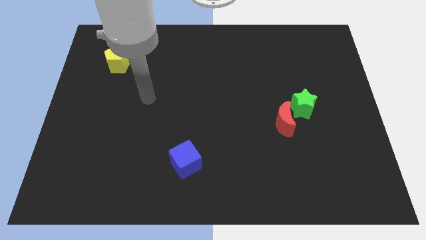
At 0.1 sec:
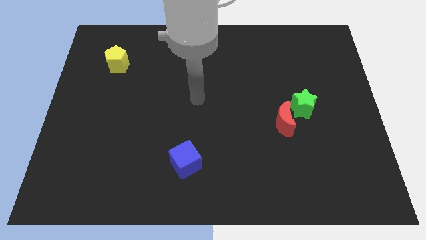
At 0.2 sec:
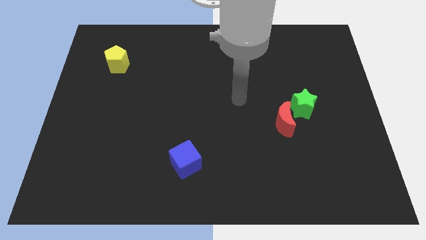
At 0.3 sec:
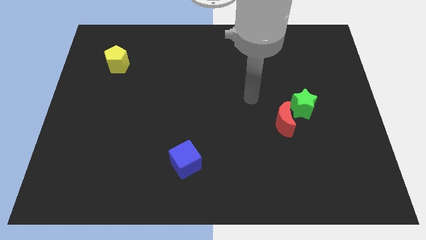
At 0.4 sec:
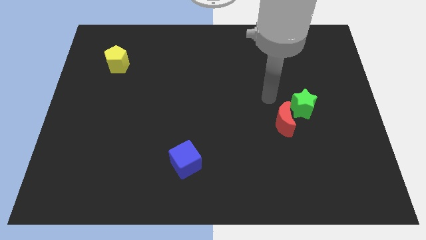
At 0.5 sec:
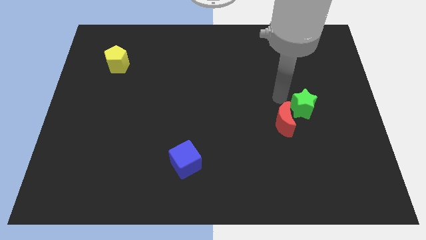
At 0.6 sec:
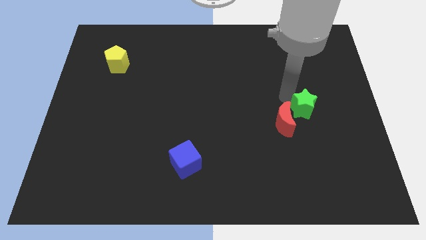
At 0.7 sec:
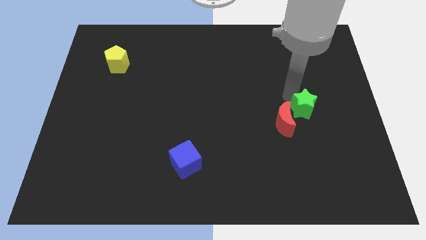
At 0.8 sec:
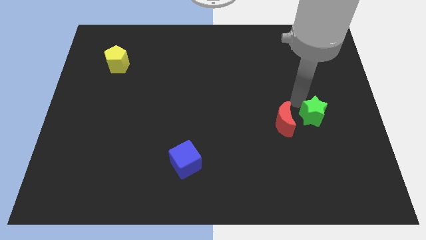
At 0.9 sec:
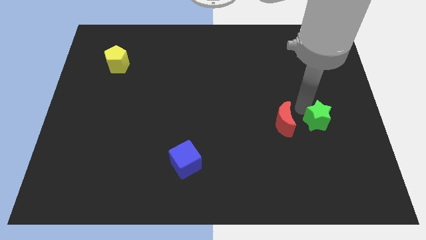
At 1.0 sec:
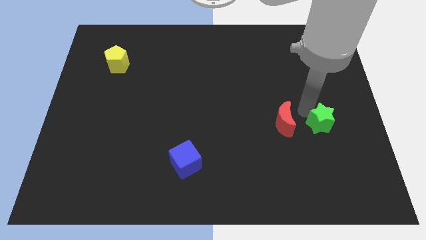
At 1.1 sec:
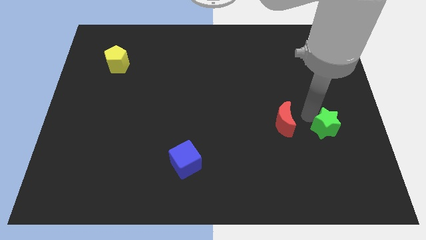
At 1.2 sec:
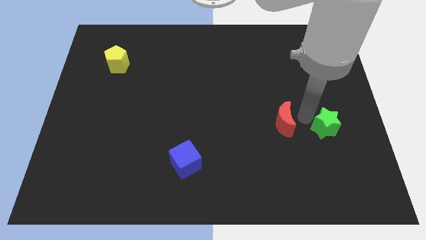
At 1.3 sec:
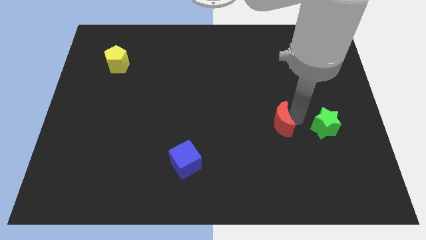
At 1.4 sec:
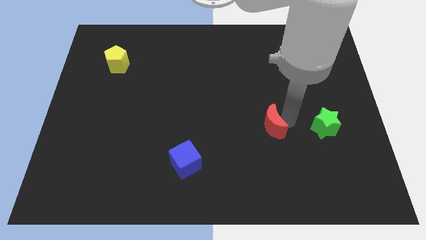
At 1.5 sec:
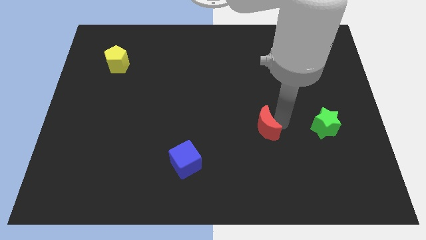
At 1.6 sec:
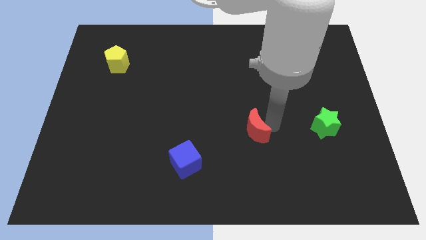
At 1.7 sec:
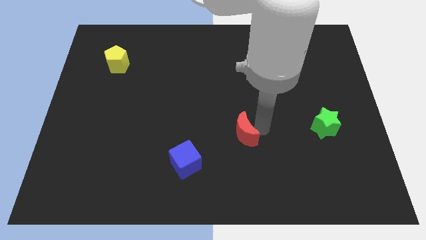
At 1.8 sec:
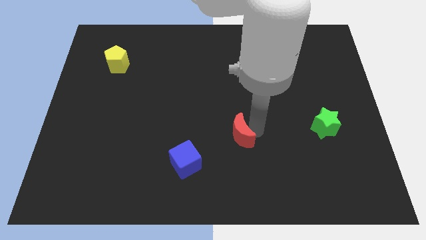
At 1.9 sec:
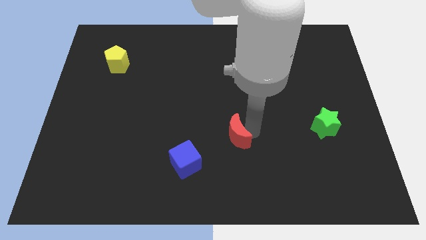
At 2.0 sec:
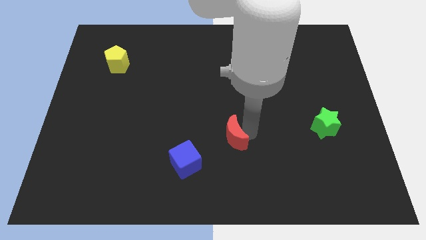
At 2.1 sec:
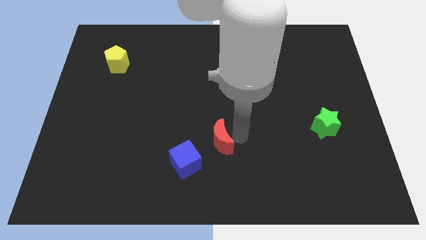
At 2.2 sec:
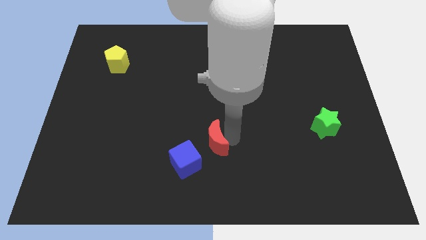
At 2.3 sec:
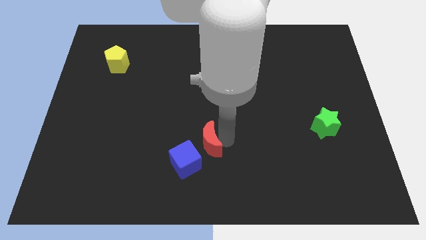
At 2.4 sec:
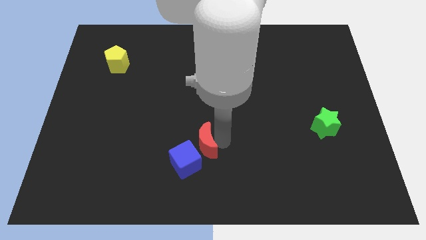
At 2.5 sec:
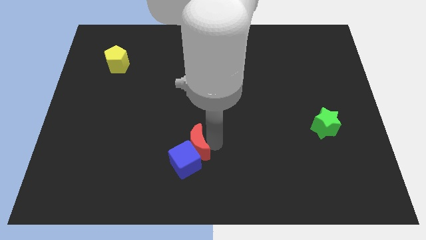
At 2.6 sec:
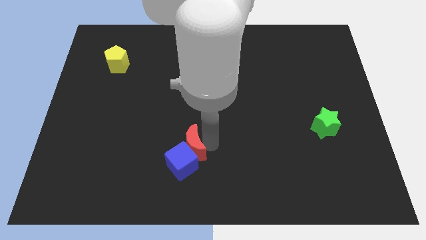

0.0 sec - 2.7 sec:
move the moon towards the blue block

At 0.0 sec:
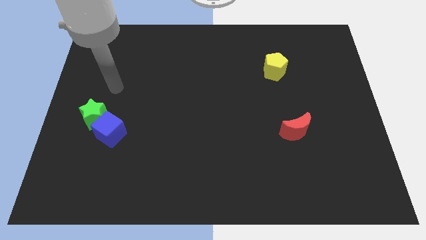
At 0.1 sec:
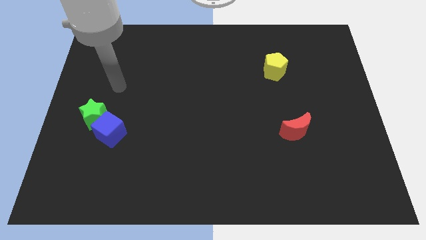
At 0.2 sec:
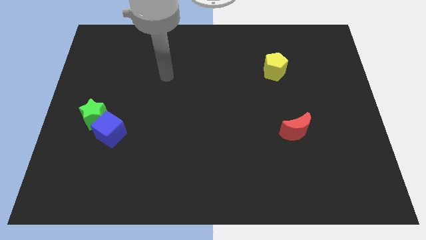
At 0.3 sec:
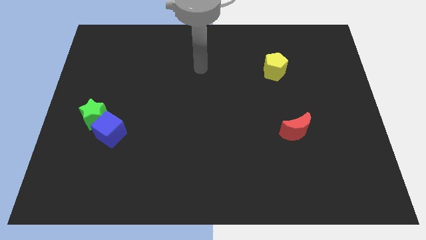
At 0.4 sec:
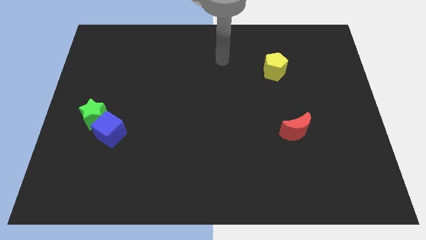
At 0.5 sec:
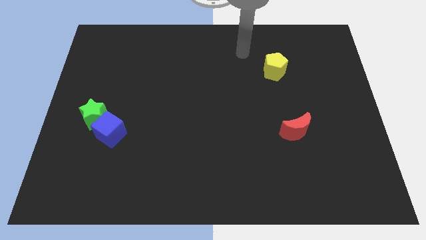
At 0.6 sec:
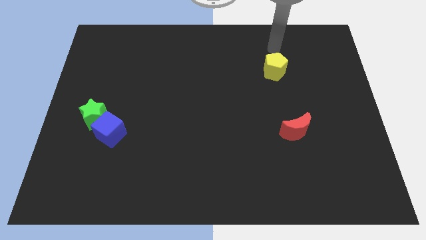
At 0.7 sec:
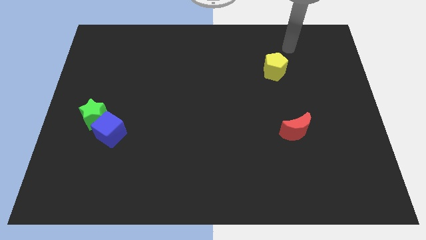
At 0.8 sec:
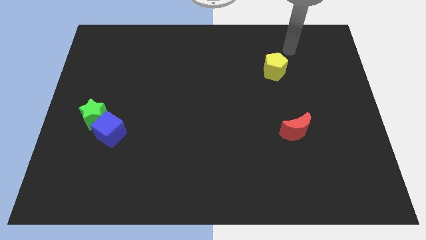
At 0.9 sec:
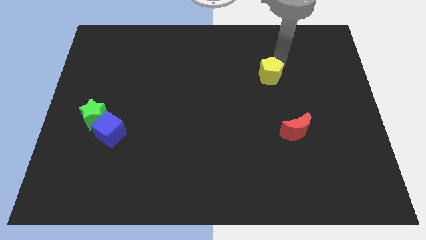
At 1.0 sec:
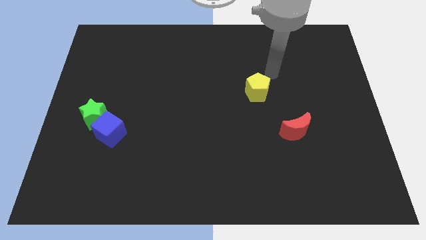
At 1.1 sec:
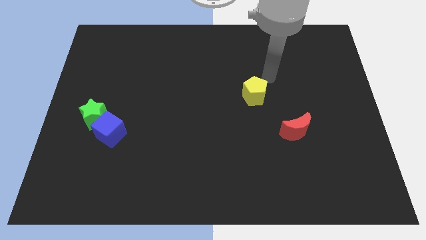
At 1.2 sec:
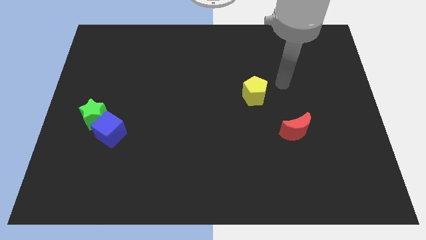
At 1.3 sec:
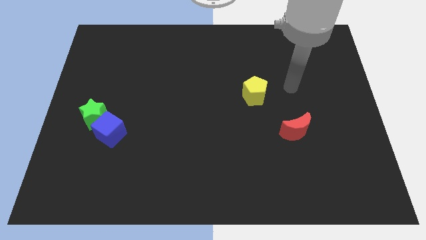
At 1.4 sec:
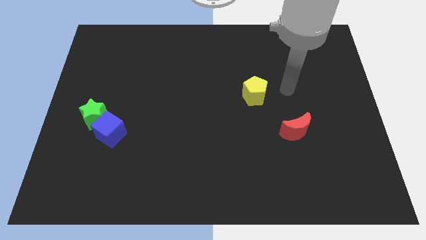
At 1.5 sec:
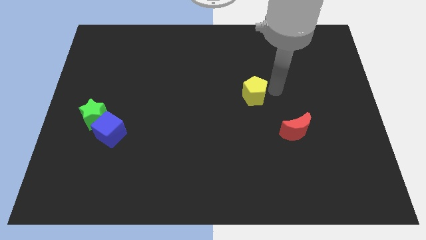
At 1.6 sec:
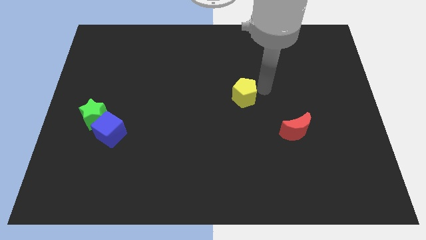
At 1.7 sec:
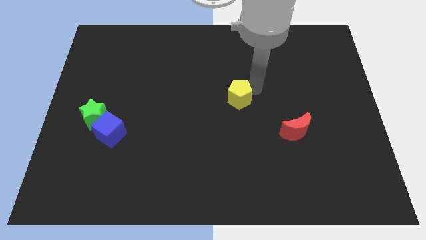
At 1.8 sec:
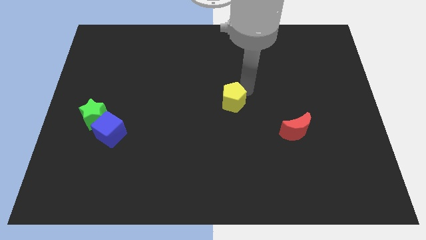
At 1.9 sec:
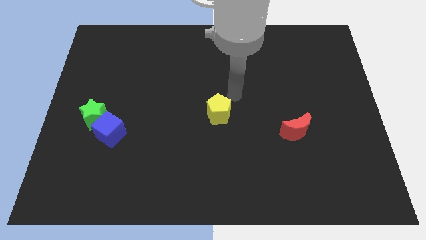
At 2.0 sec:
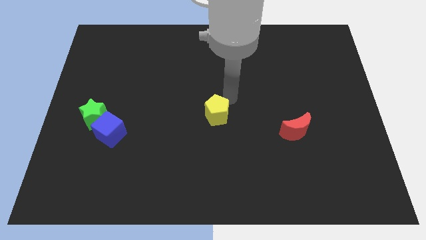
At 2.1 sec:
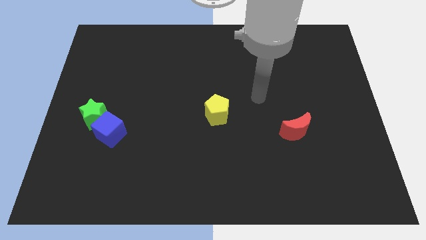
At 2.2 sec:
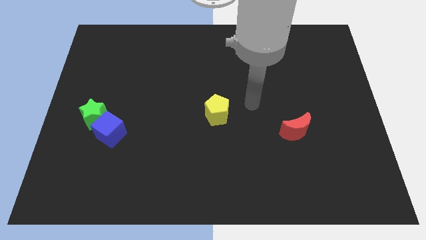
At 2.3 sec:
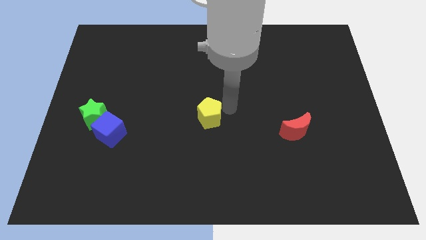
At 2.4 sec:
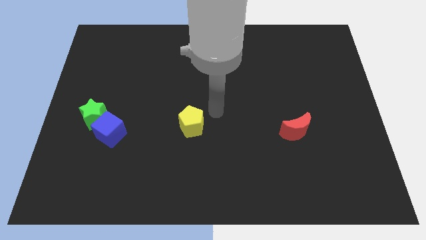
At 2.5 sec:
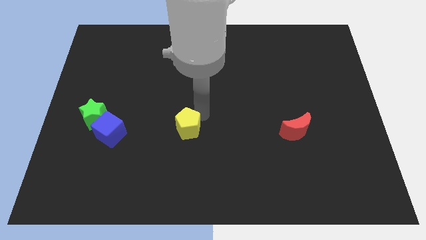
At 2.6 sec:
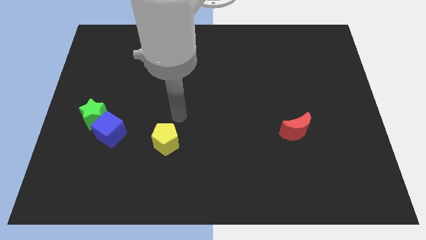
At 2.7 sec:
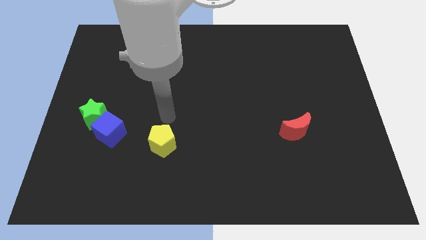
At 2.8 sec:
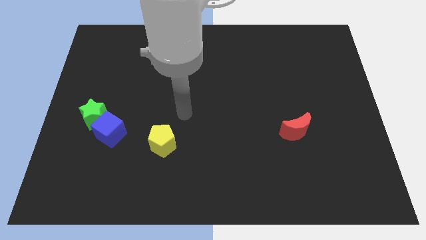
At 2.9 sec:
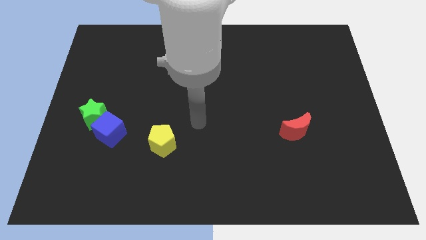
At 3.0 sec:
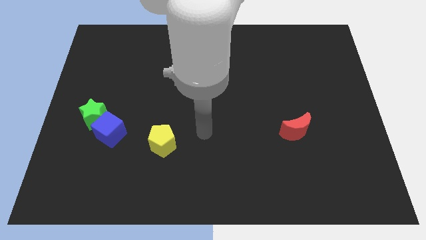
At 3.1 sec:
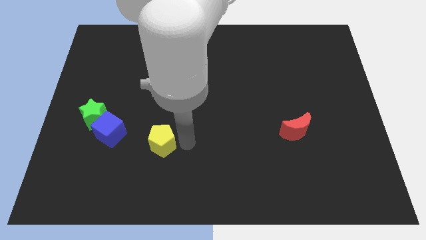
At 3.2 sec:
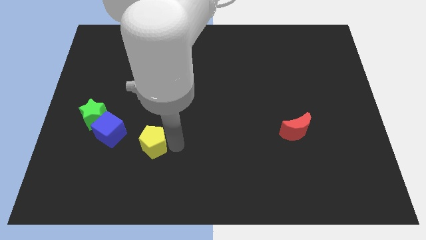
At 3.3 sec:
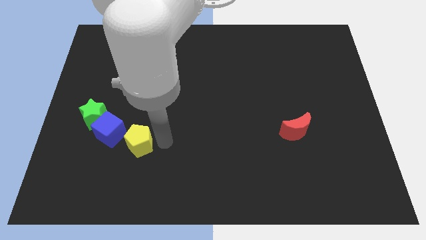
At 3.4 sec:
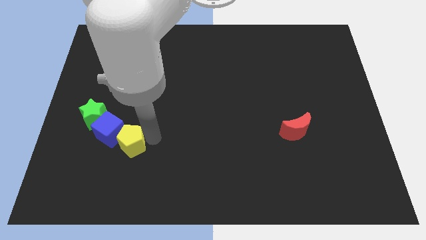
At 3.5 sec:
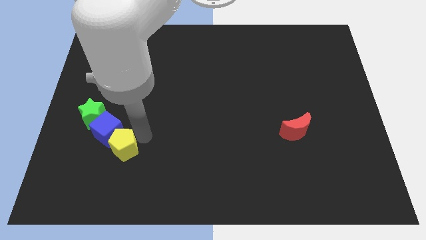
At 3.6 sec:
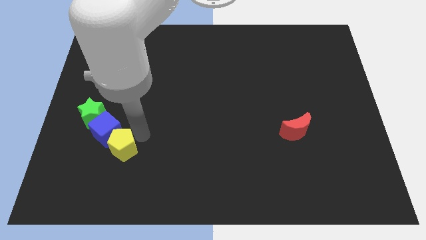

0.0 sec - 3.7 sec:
move the yellow block next to the cube

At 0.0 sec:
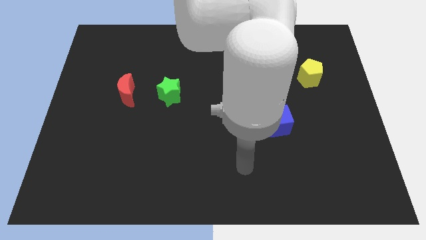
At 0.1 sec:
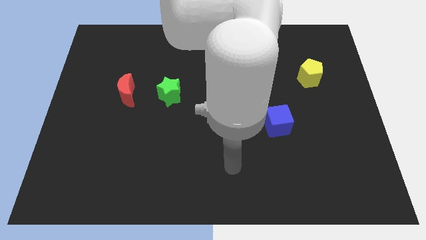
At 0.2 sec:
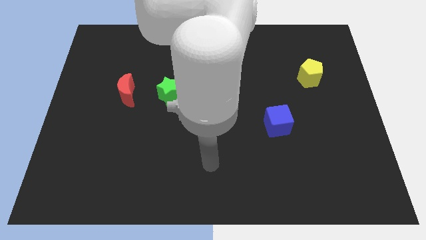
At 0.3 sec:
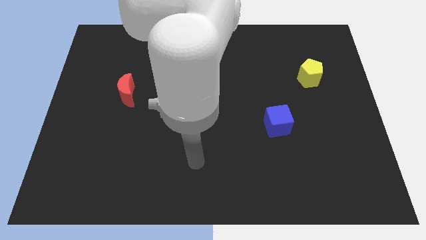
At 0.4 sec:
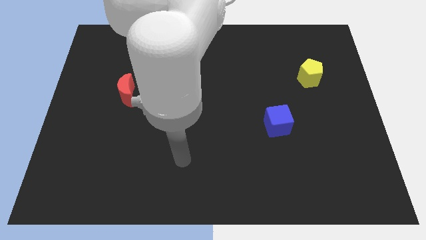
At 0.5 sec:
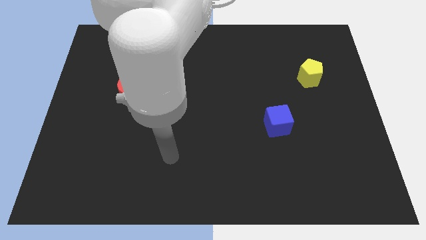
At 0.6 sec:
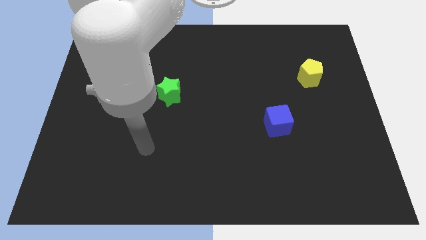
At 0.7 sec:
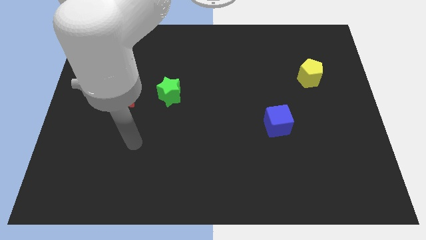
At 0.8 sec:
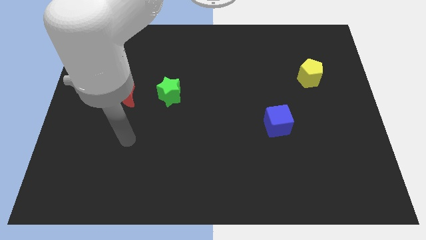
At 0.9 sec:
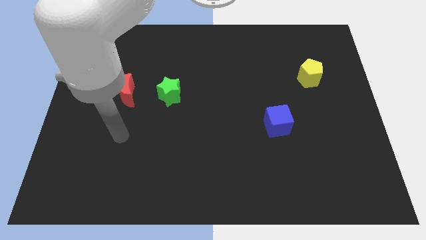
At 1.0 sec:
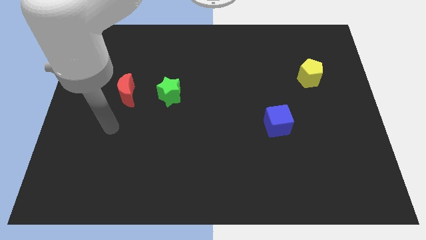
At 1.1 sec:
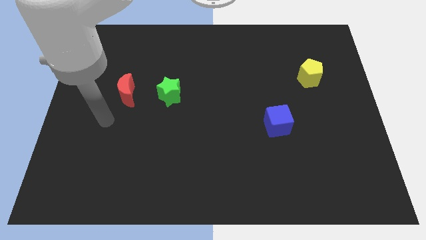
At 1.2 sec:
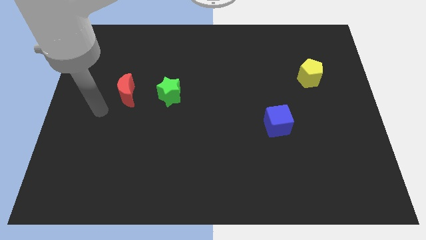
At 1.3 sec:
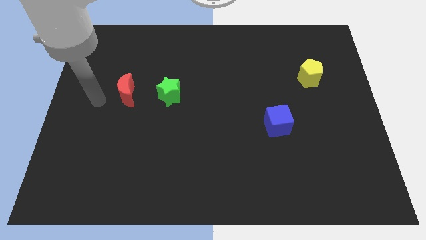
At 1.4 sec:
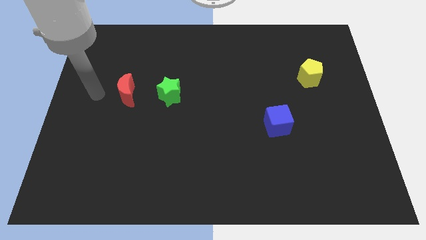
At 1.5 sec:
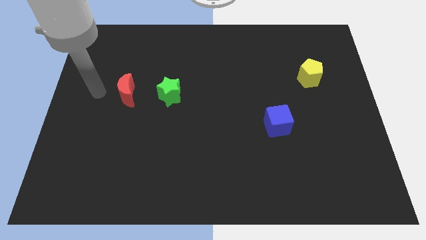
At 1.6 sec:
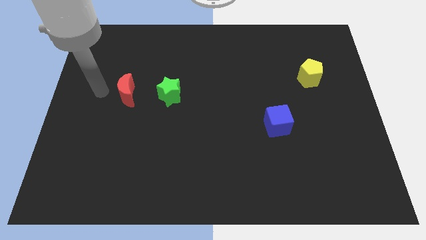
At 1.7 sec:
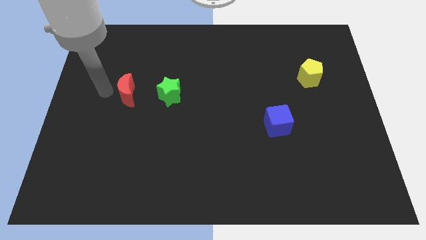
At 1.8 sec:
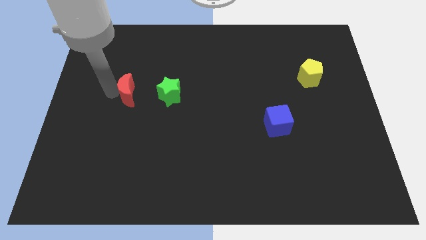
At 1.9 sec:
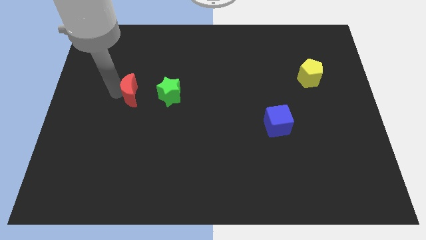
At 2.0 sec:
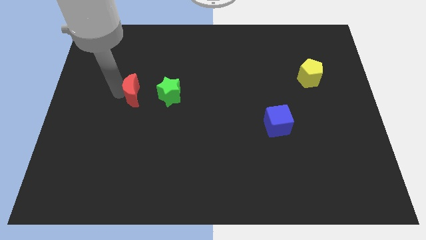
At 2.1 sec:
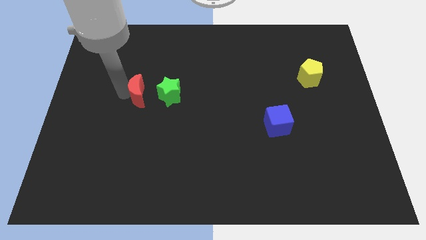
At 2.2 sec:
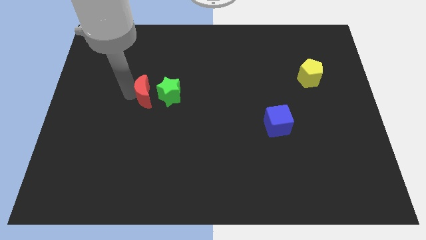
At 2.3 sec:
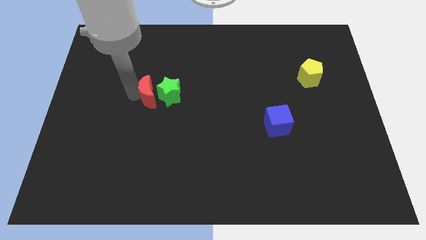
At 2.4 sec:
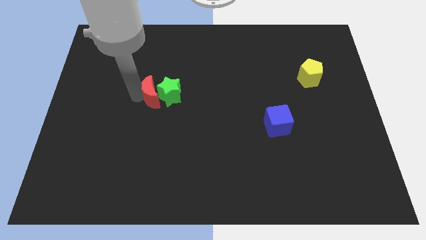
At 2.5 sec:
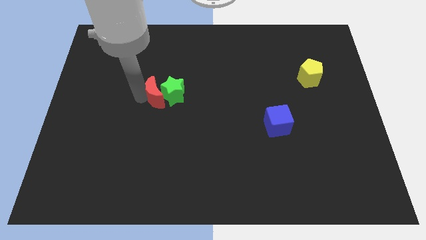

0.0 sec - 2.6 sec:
move the red block to the green block
